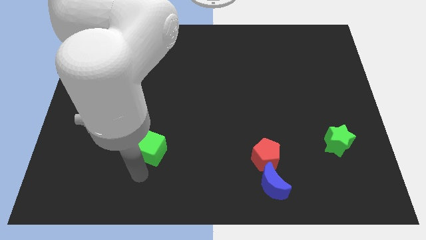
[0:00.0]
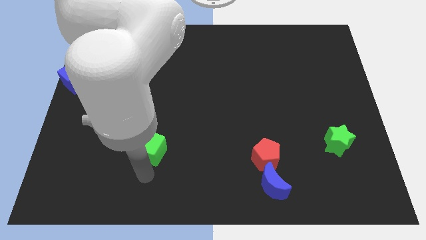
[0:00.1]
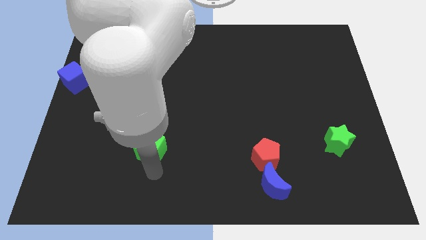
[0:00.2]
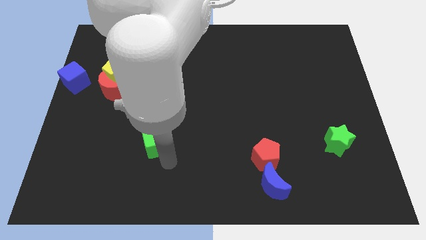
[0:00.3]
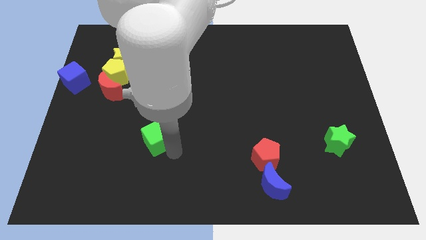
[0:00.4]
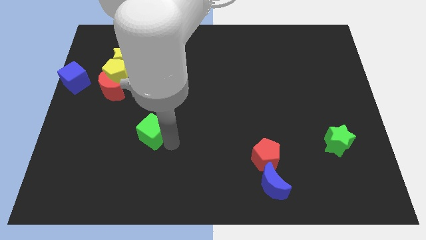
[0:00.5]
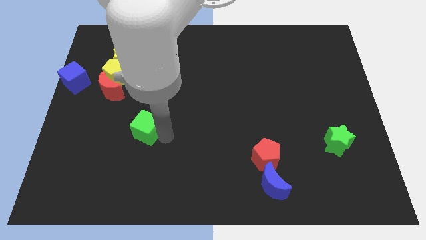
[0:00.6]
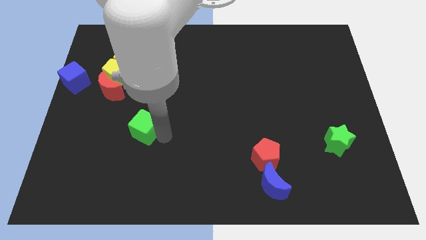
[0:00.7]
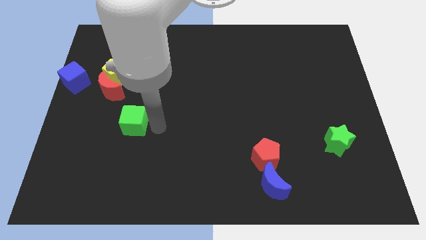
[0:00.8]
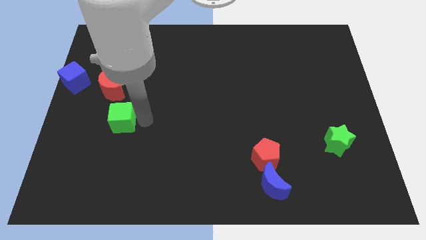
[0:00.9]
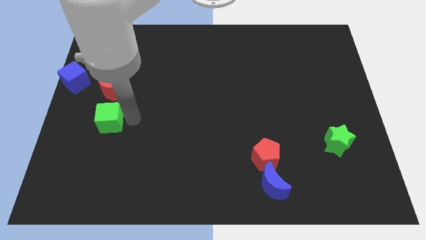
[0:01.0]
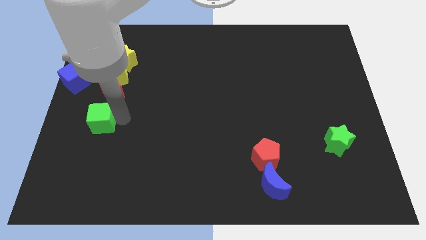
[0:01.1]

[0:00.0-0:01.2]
place the green cube underneath the red moon

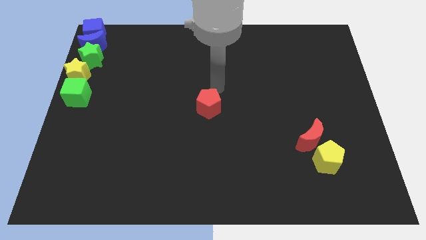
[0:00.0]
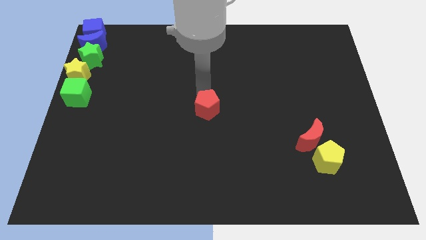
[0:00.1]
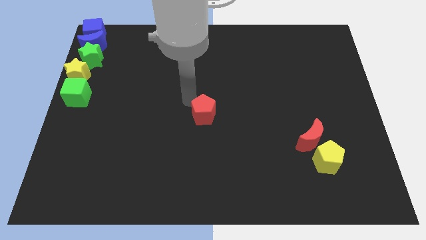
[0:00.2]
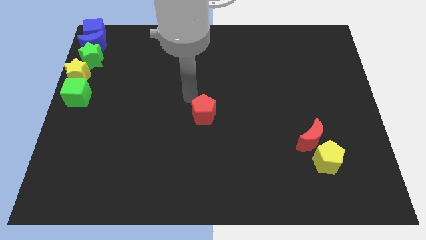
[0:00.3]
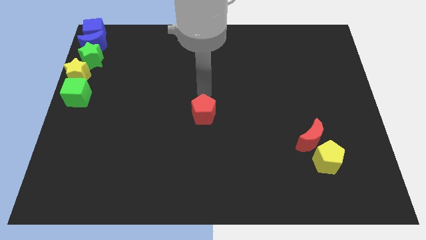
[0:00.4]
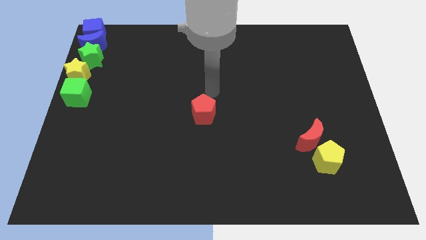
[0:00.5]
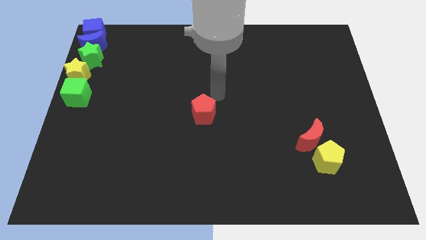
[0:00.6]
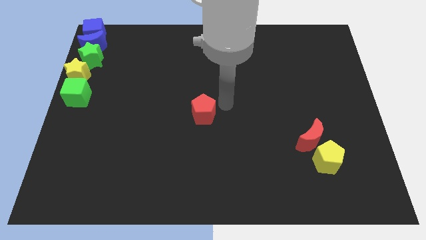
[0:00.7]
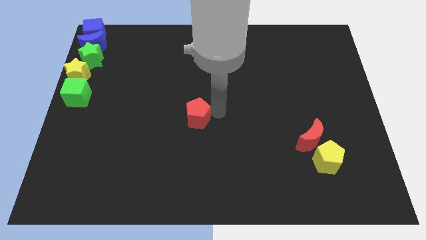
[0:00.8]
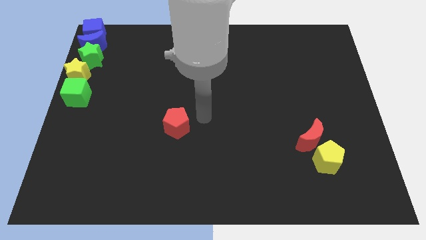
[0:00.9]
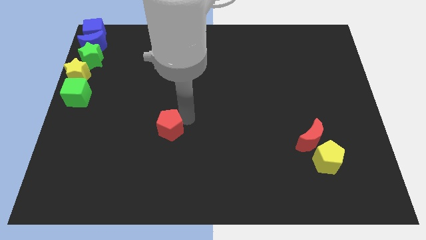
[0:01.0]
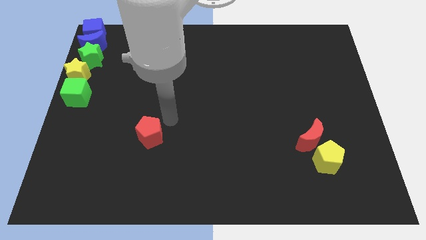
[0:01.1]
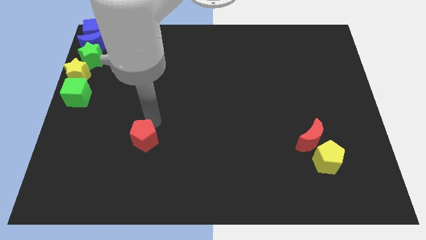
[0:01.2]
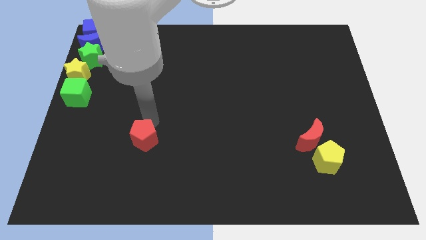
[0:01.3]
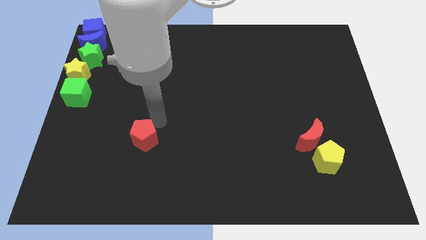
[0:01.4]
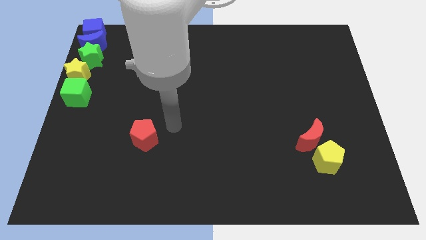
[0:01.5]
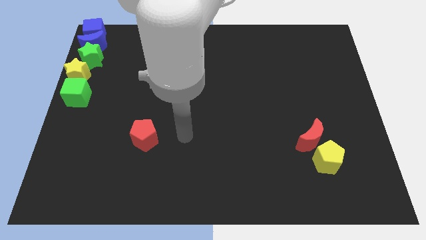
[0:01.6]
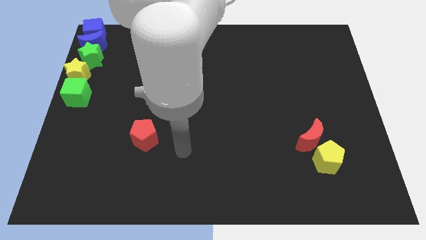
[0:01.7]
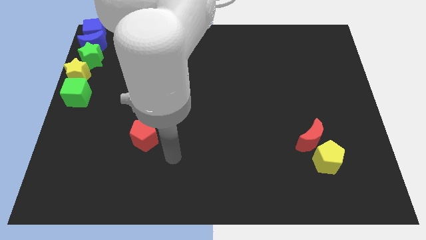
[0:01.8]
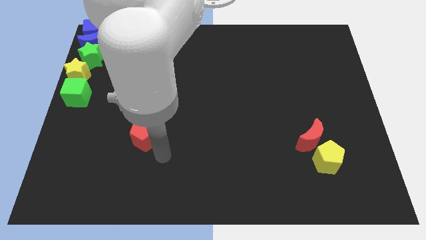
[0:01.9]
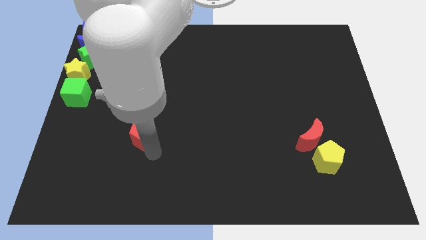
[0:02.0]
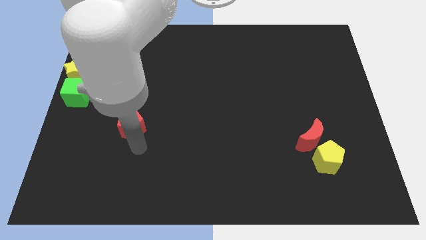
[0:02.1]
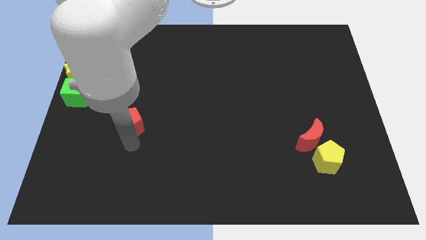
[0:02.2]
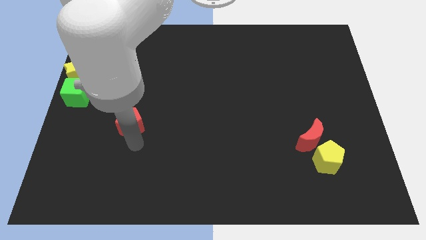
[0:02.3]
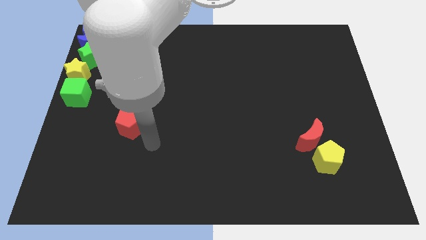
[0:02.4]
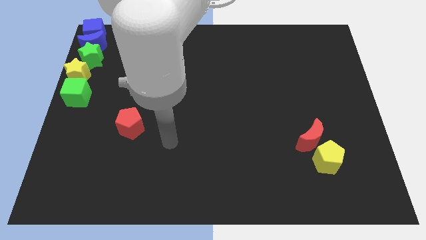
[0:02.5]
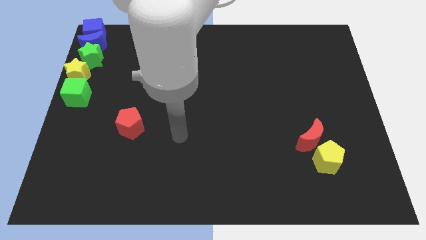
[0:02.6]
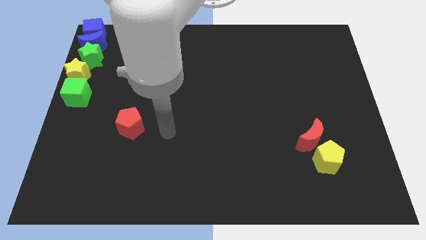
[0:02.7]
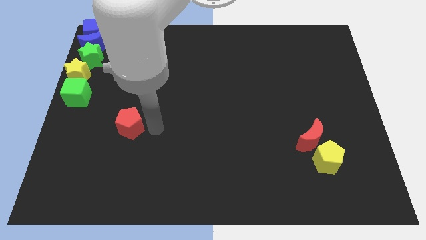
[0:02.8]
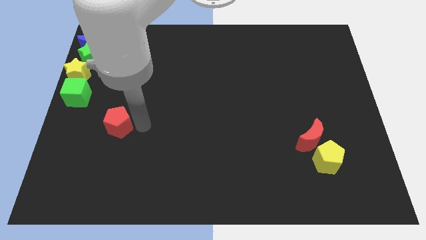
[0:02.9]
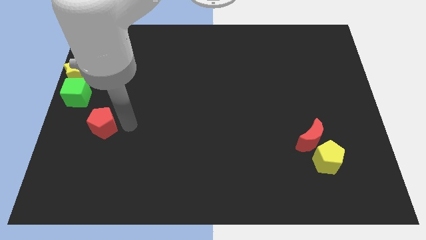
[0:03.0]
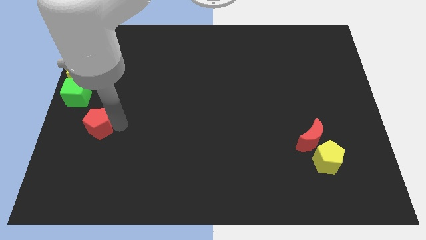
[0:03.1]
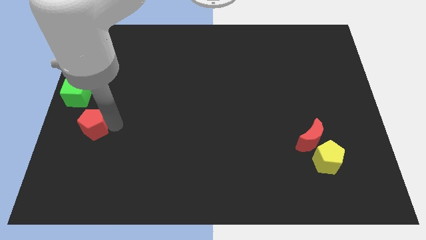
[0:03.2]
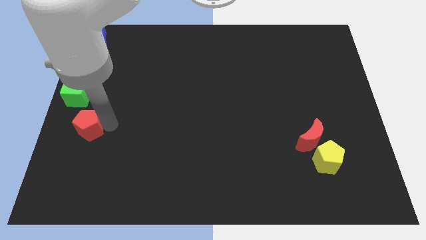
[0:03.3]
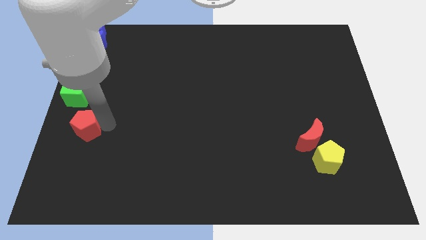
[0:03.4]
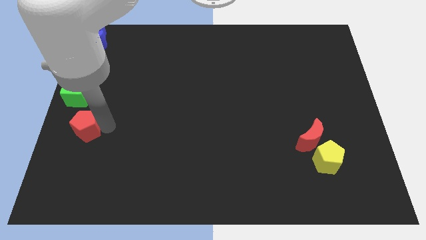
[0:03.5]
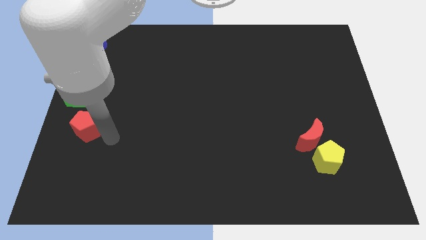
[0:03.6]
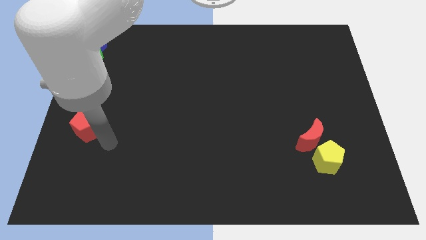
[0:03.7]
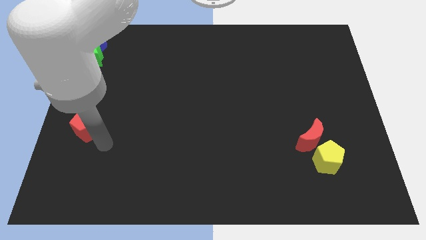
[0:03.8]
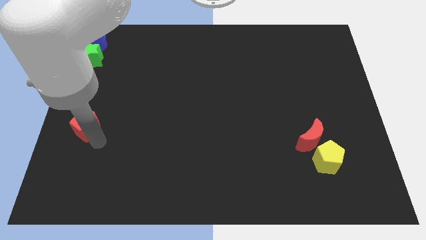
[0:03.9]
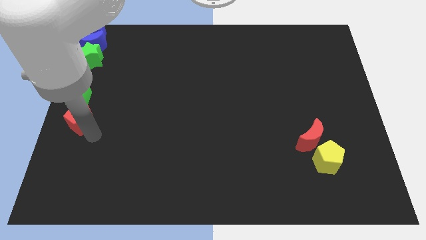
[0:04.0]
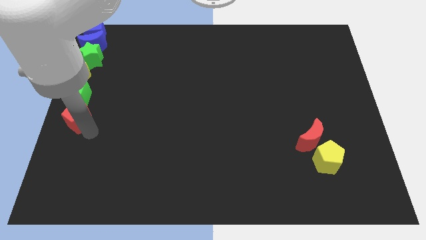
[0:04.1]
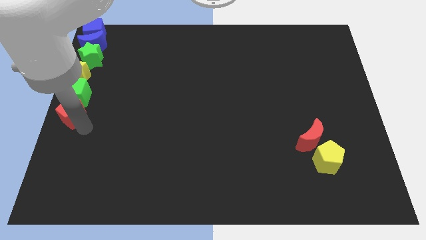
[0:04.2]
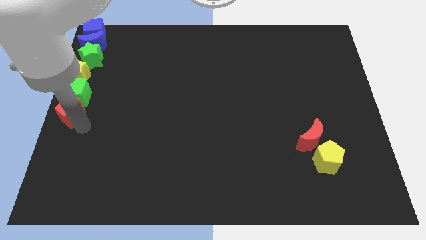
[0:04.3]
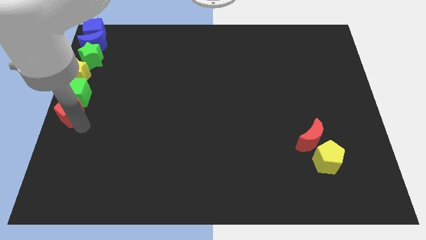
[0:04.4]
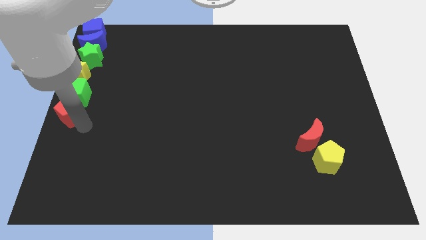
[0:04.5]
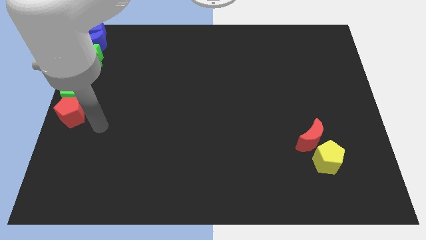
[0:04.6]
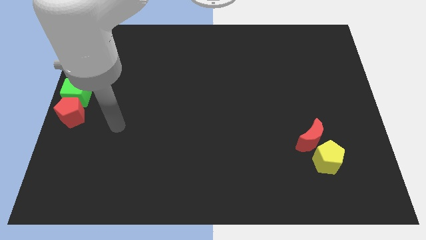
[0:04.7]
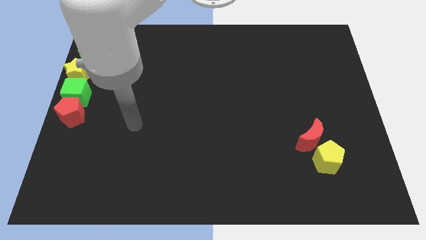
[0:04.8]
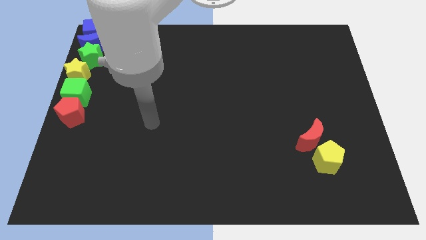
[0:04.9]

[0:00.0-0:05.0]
move the red pentagon to the bottom side of the green cube

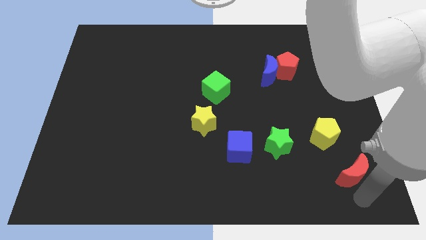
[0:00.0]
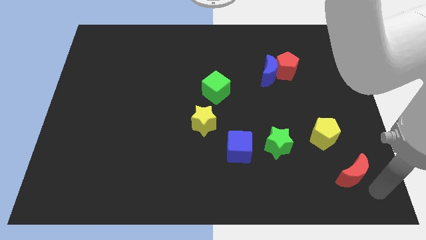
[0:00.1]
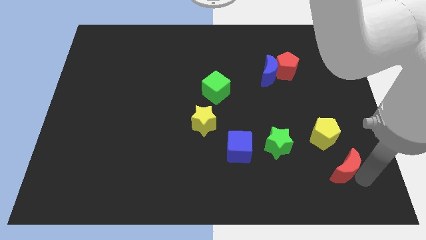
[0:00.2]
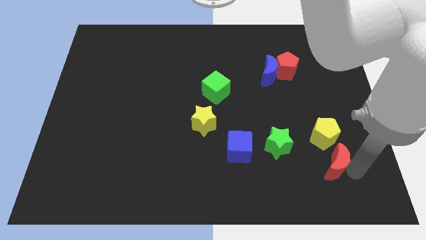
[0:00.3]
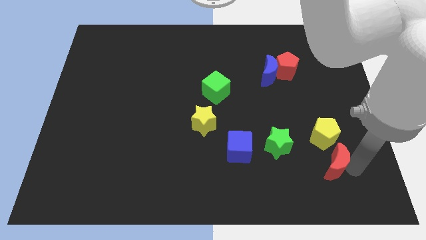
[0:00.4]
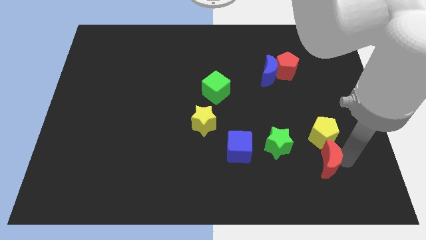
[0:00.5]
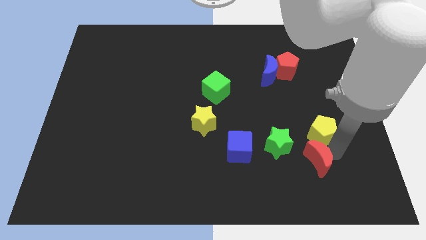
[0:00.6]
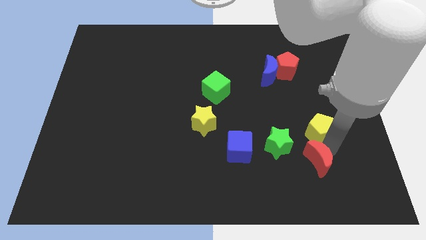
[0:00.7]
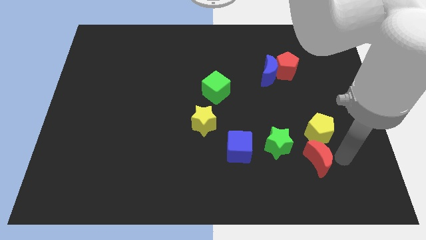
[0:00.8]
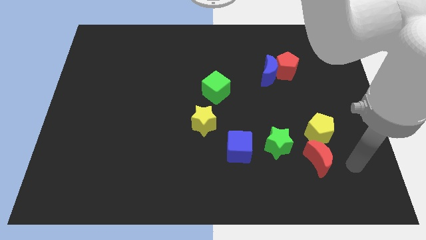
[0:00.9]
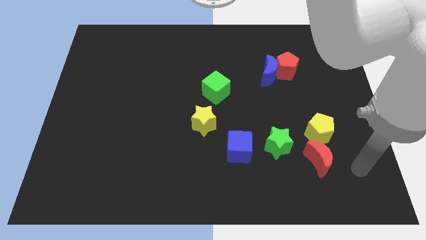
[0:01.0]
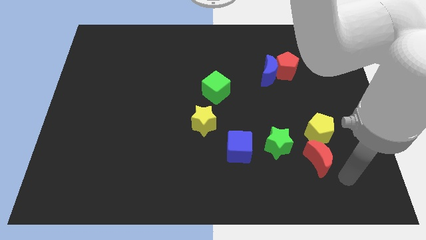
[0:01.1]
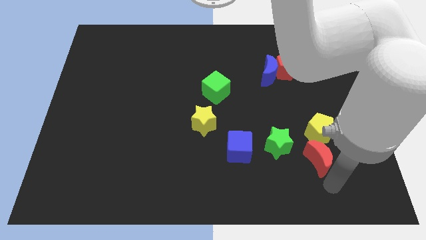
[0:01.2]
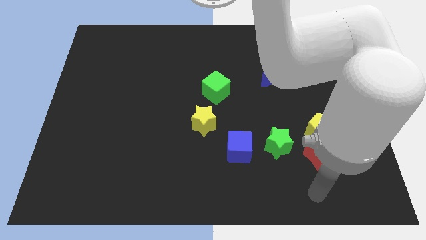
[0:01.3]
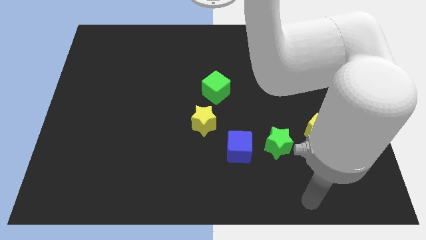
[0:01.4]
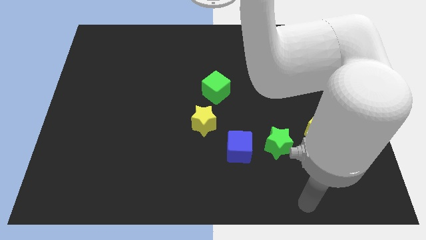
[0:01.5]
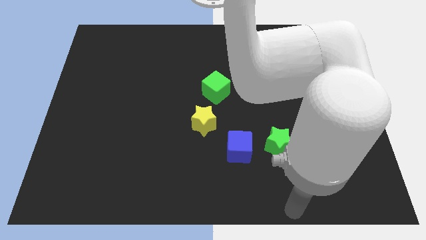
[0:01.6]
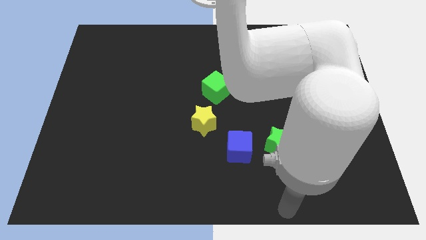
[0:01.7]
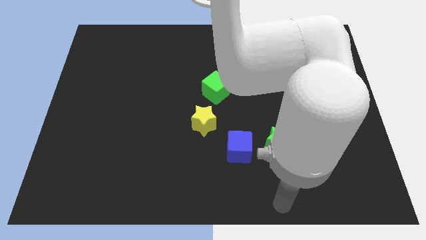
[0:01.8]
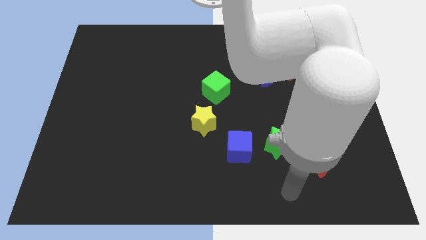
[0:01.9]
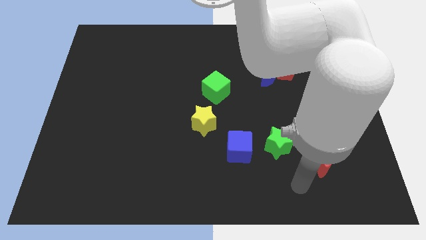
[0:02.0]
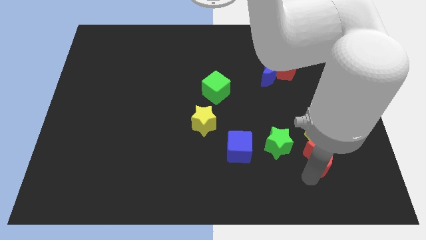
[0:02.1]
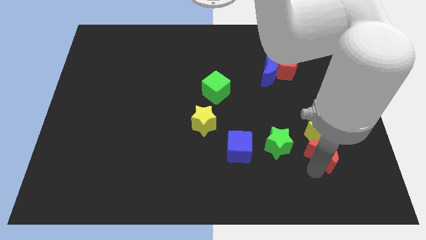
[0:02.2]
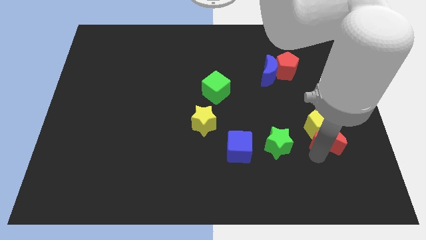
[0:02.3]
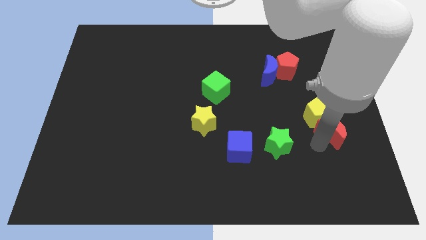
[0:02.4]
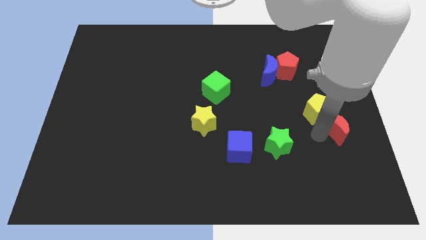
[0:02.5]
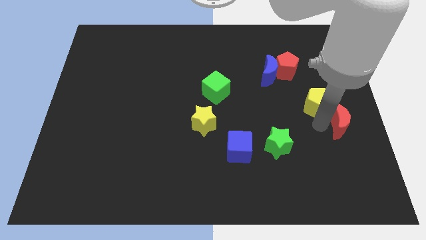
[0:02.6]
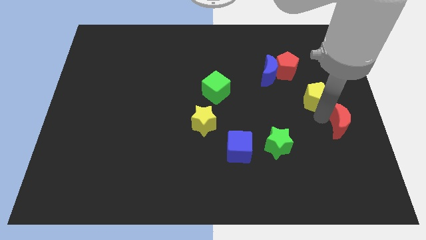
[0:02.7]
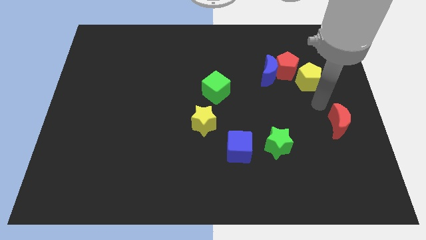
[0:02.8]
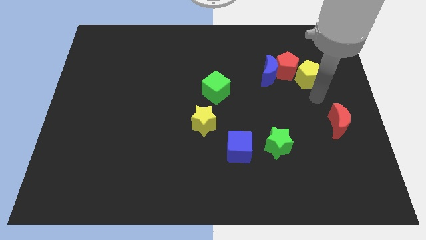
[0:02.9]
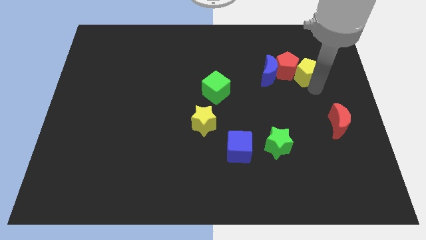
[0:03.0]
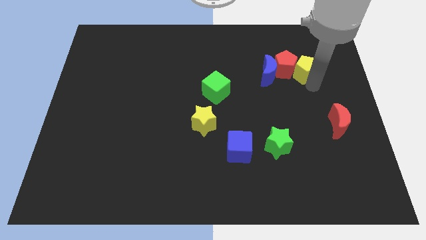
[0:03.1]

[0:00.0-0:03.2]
push the yellow pentagon into the red pentagon
